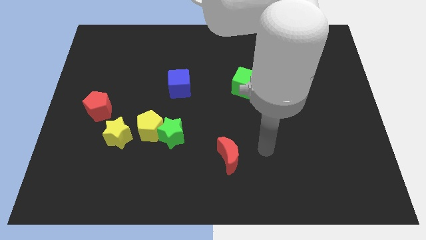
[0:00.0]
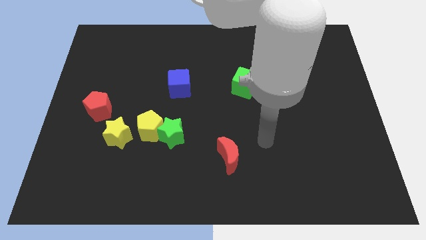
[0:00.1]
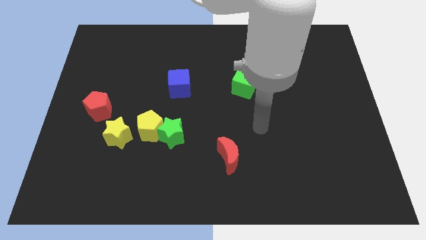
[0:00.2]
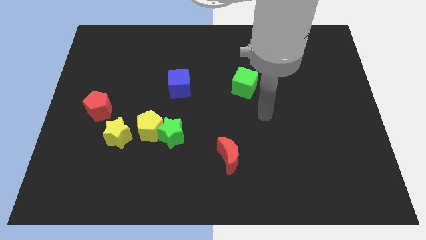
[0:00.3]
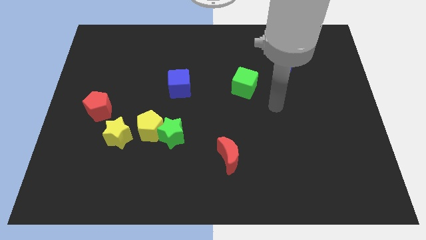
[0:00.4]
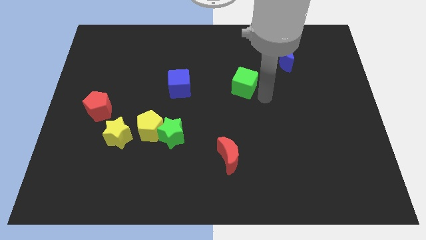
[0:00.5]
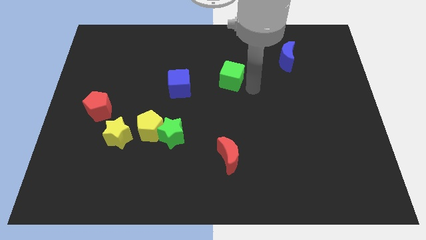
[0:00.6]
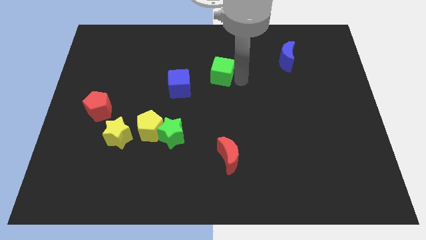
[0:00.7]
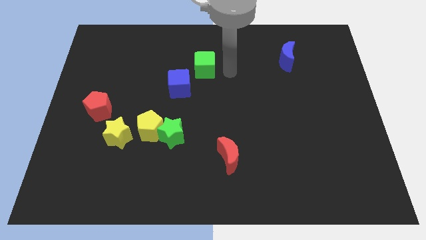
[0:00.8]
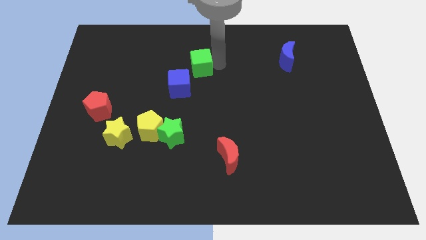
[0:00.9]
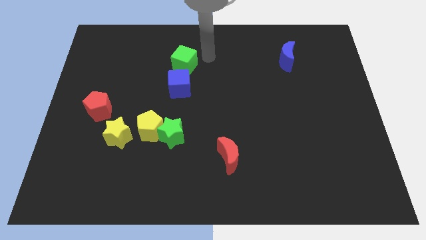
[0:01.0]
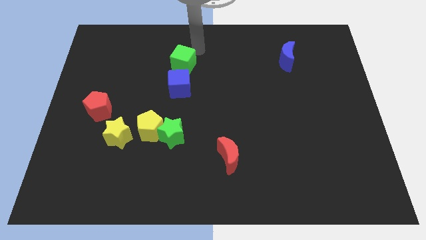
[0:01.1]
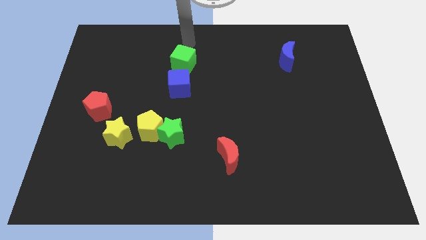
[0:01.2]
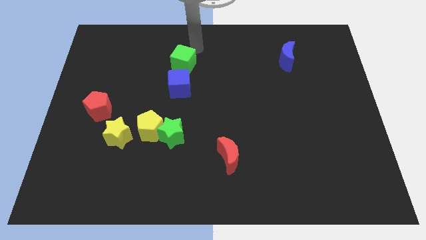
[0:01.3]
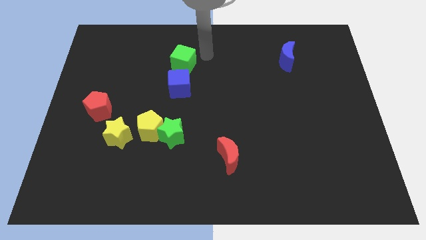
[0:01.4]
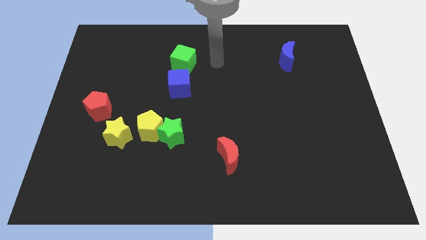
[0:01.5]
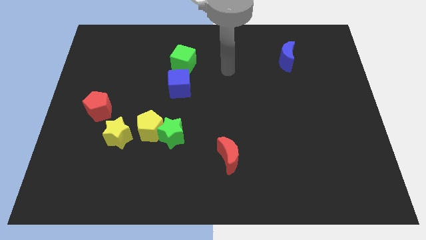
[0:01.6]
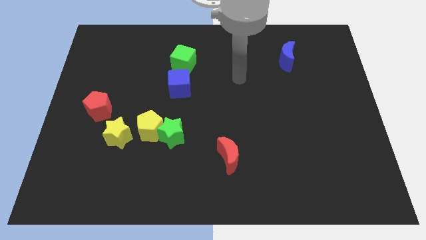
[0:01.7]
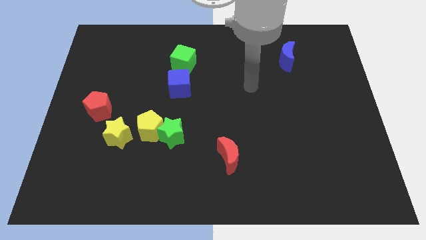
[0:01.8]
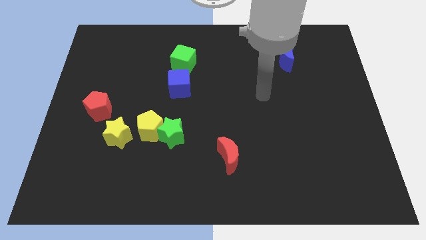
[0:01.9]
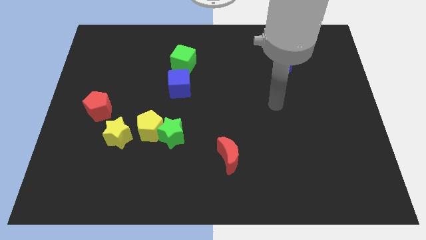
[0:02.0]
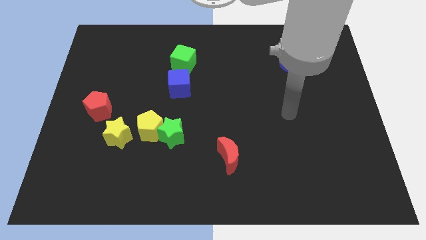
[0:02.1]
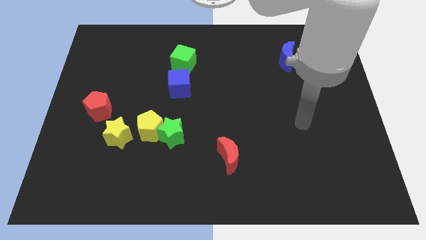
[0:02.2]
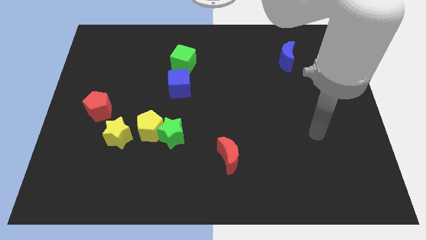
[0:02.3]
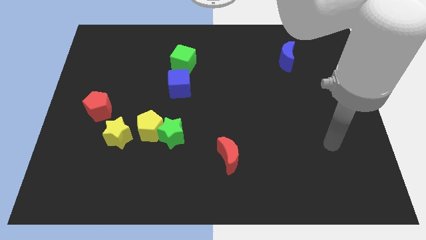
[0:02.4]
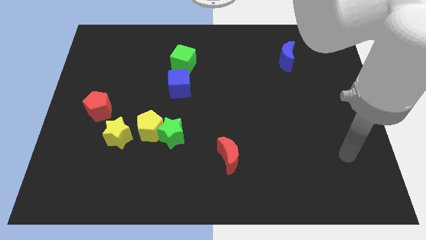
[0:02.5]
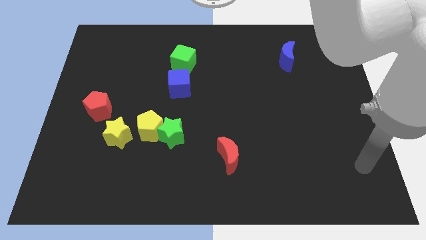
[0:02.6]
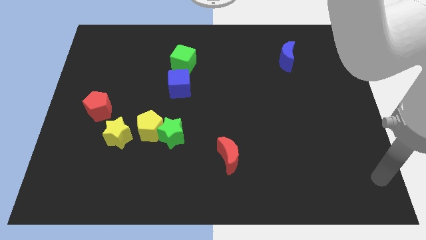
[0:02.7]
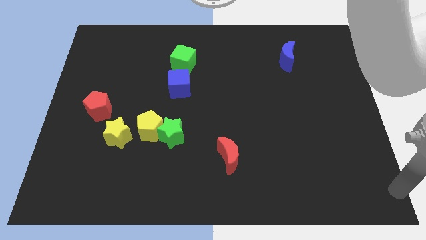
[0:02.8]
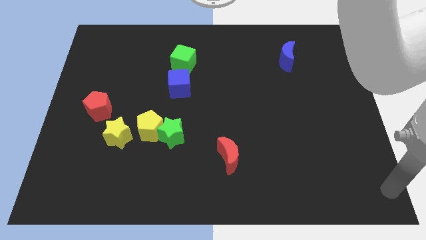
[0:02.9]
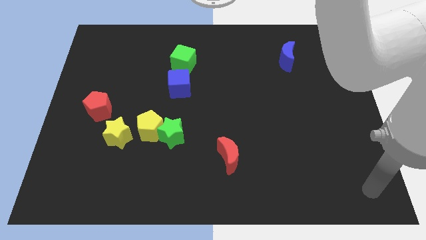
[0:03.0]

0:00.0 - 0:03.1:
put the green cube at the top side of the blue cube

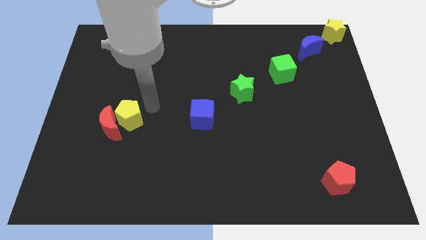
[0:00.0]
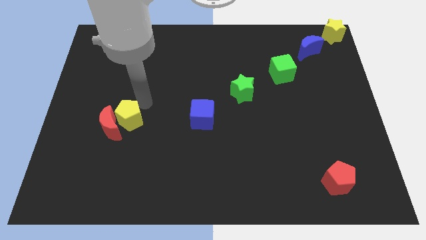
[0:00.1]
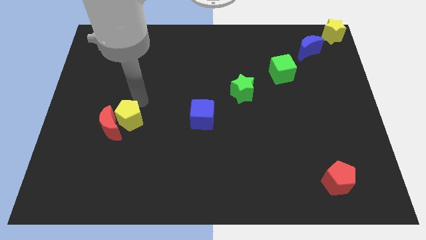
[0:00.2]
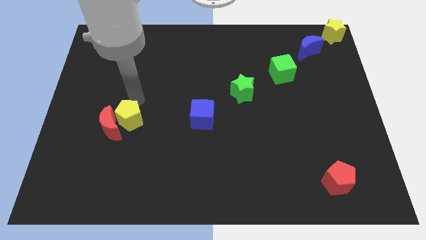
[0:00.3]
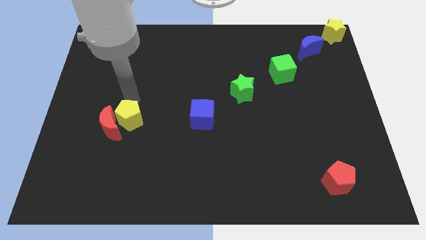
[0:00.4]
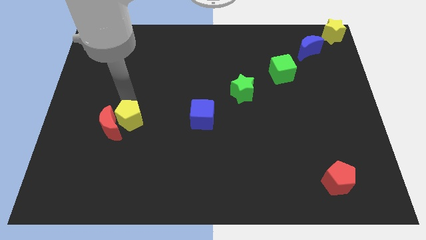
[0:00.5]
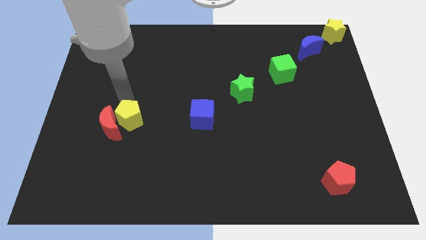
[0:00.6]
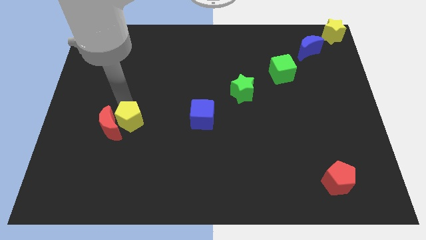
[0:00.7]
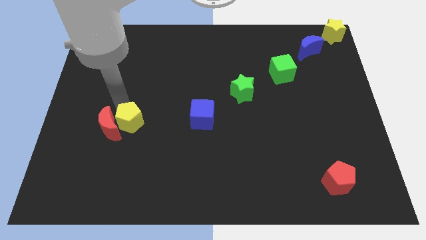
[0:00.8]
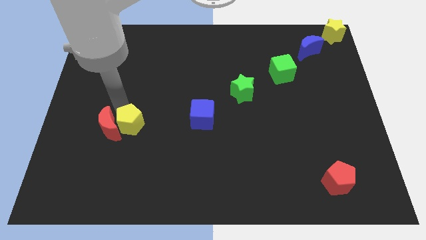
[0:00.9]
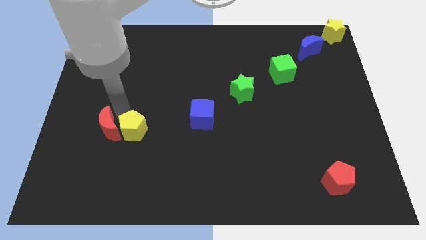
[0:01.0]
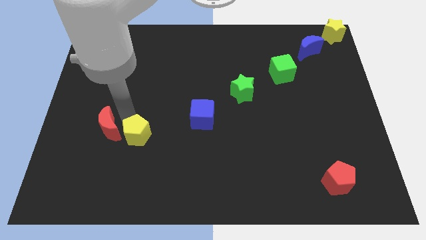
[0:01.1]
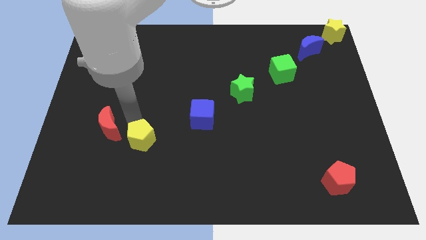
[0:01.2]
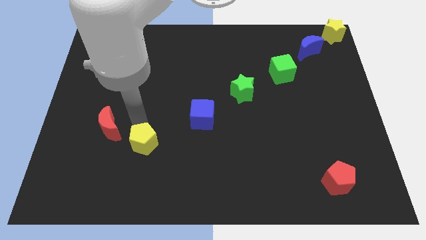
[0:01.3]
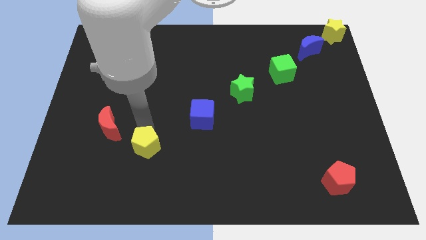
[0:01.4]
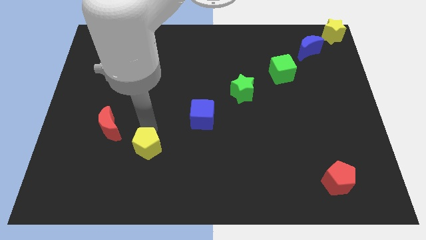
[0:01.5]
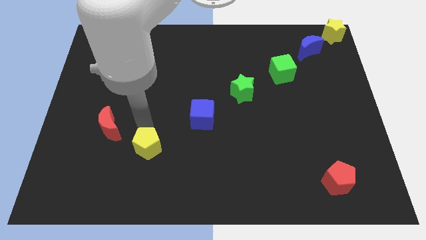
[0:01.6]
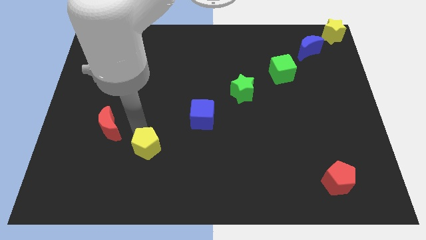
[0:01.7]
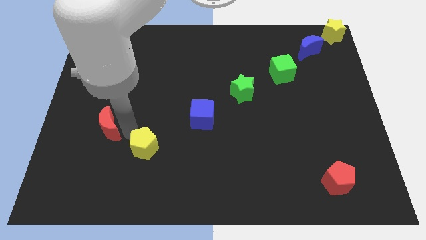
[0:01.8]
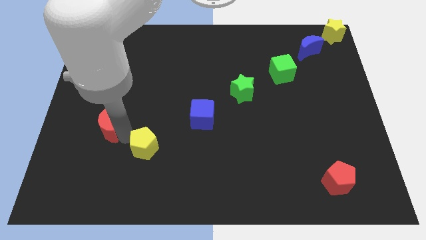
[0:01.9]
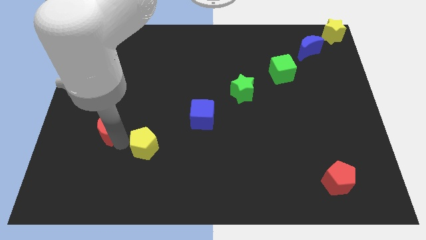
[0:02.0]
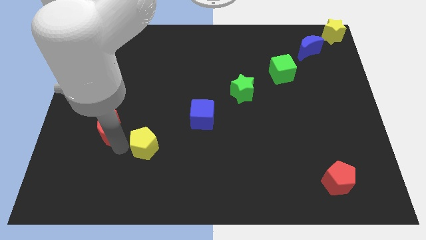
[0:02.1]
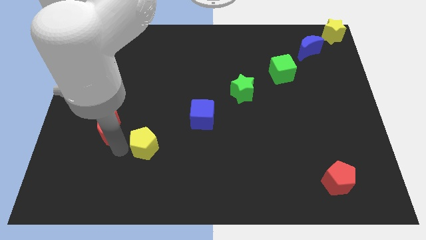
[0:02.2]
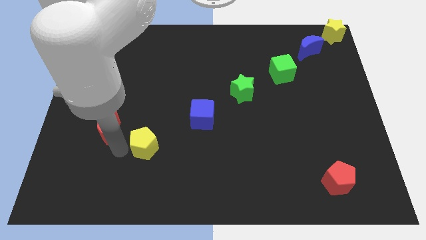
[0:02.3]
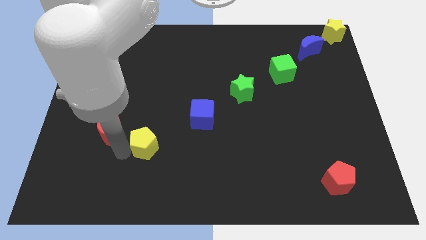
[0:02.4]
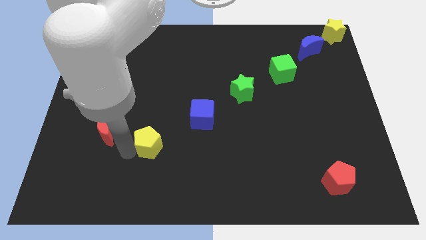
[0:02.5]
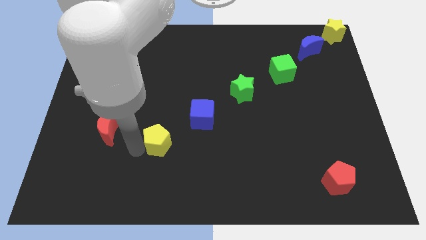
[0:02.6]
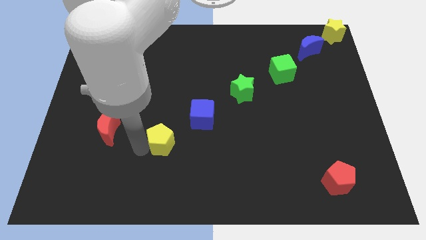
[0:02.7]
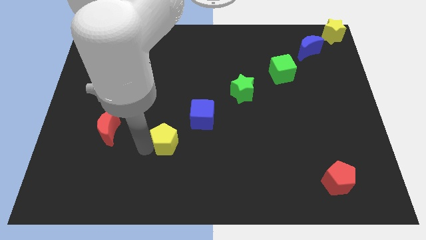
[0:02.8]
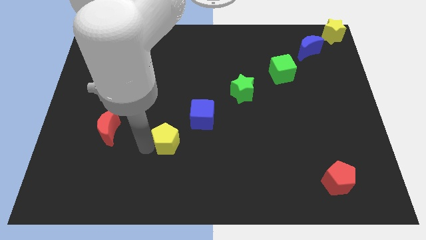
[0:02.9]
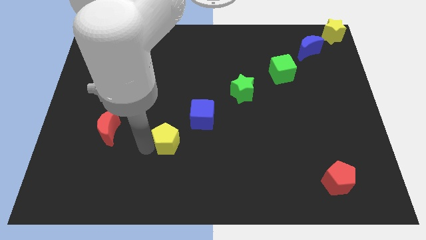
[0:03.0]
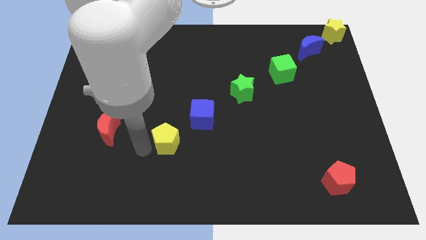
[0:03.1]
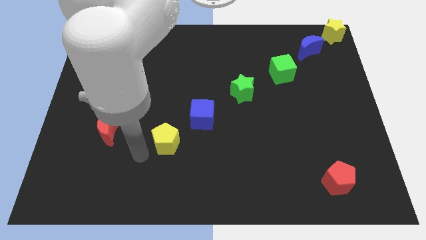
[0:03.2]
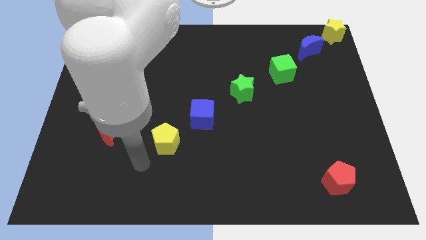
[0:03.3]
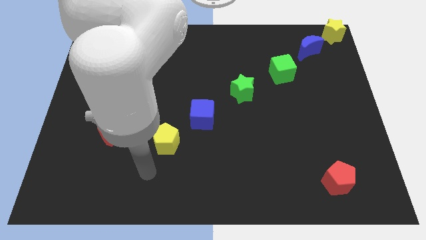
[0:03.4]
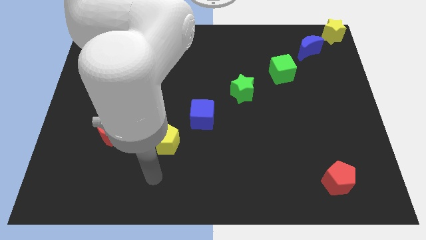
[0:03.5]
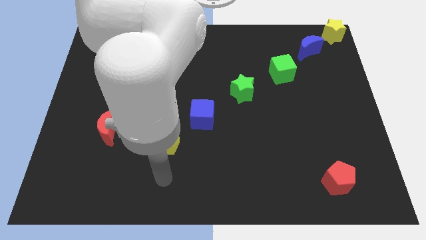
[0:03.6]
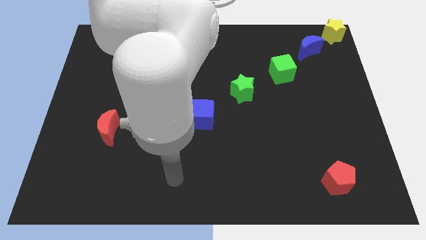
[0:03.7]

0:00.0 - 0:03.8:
push yellow pentagon diagonal to blue cube

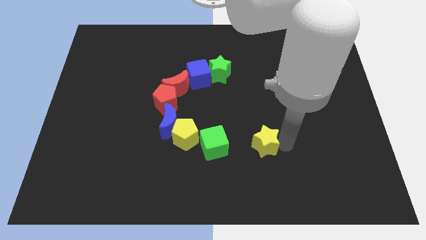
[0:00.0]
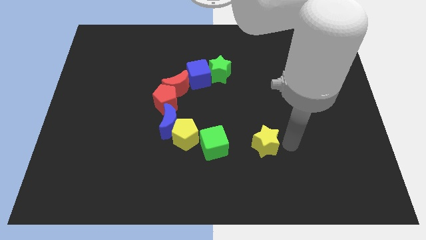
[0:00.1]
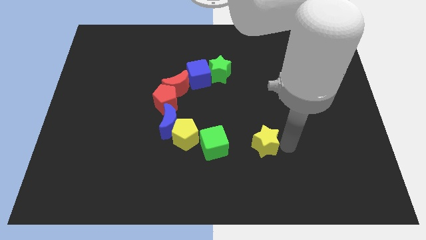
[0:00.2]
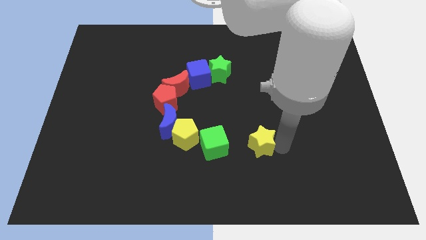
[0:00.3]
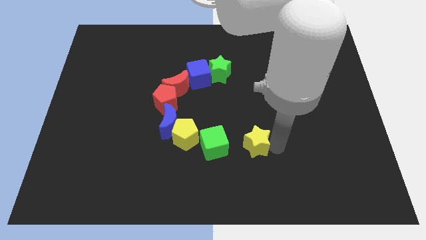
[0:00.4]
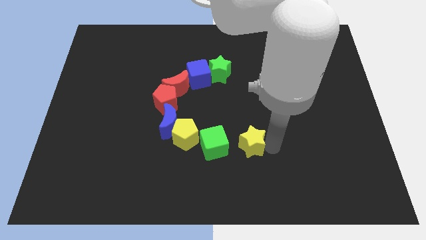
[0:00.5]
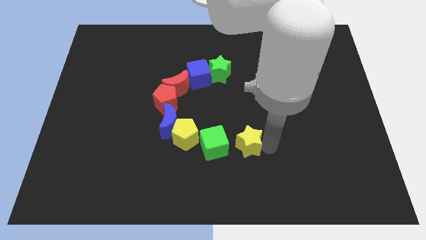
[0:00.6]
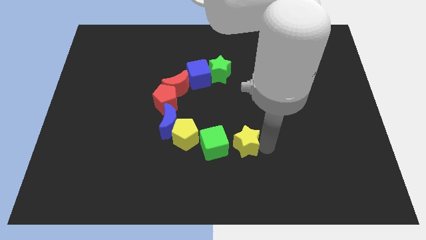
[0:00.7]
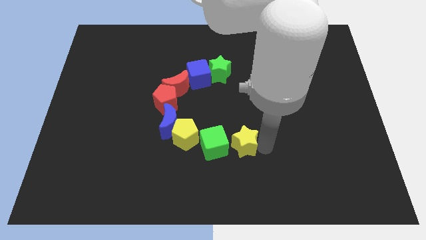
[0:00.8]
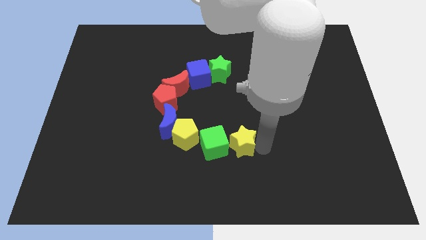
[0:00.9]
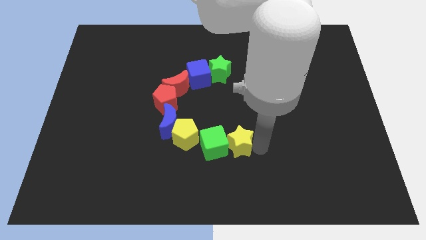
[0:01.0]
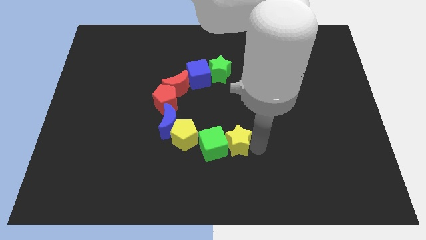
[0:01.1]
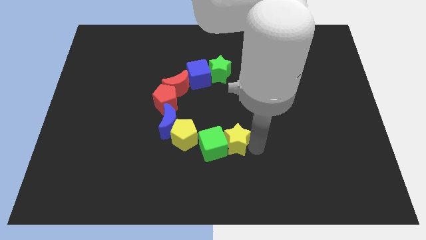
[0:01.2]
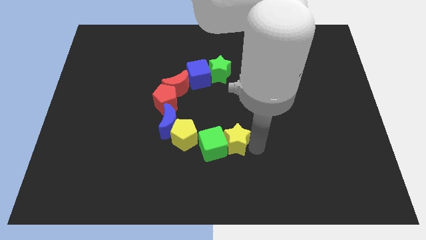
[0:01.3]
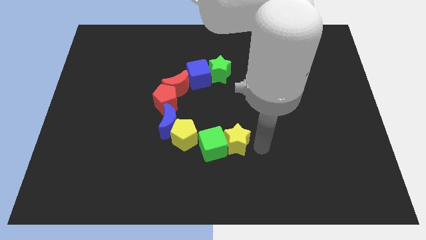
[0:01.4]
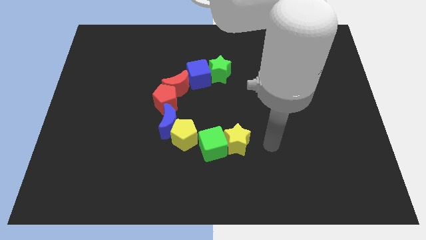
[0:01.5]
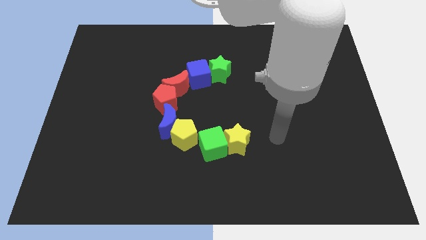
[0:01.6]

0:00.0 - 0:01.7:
push the yellow star to the right of the green cube

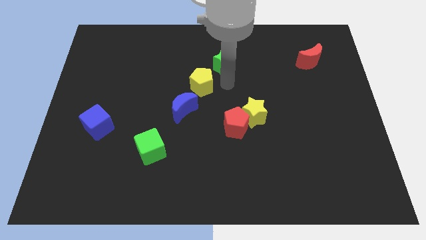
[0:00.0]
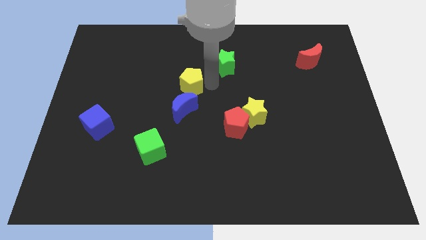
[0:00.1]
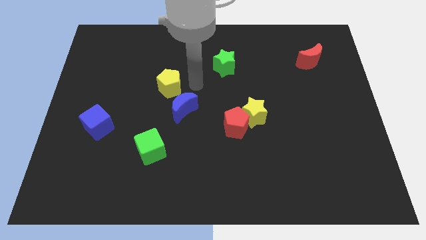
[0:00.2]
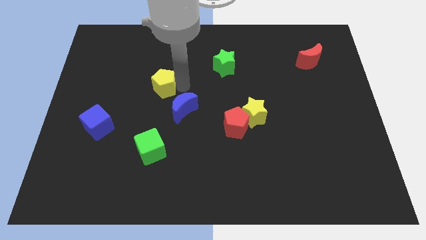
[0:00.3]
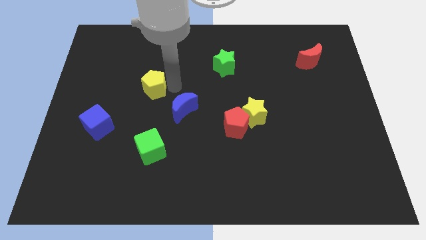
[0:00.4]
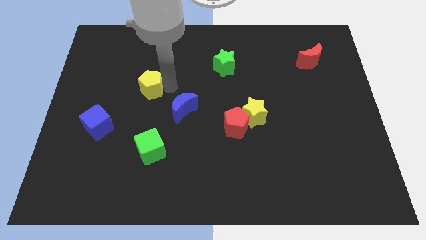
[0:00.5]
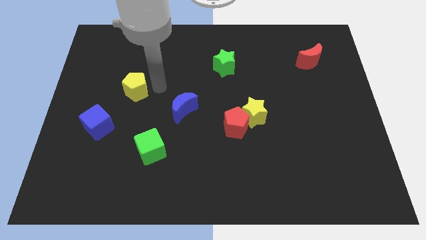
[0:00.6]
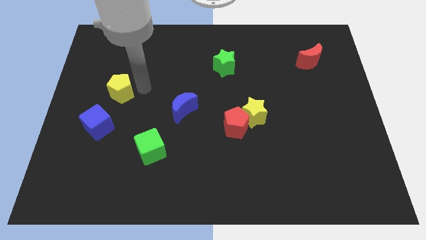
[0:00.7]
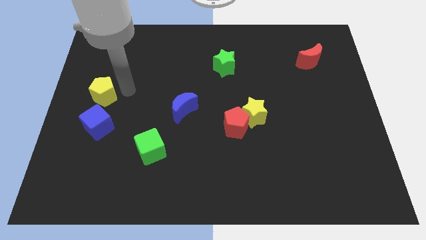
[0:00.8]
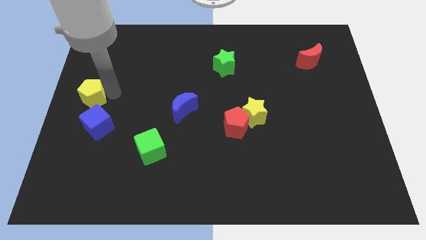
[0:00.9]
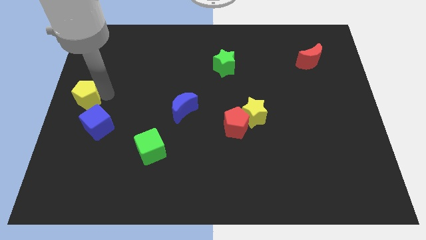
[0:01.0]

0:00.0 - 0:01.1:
move the yellow pentagon towards the left side of the board
